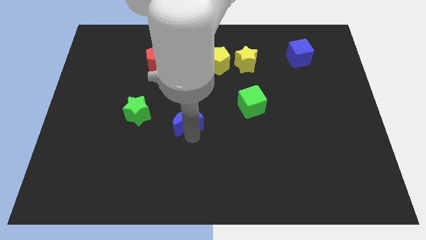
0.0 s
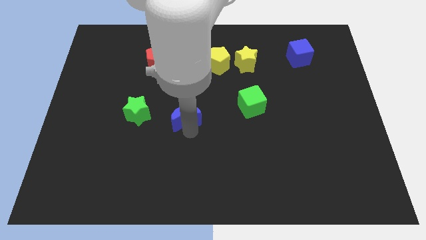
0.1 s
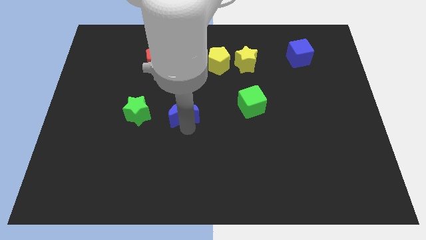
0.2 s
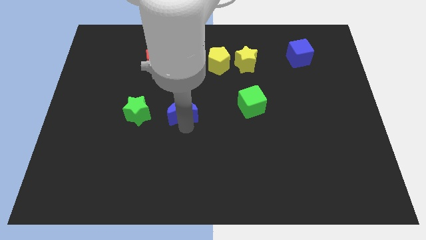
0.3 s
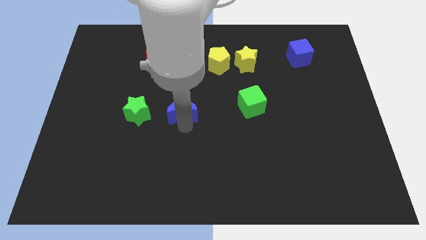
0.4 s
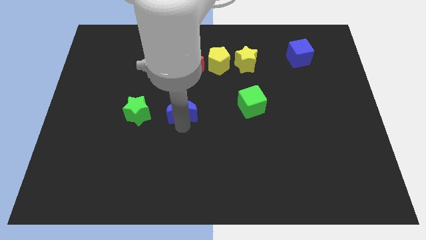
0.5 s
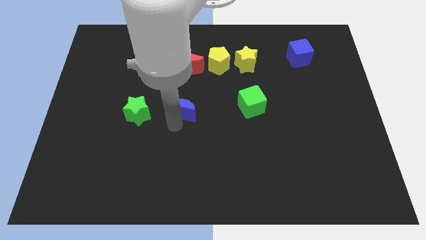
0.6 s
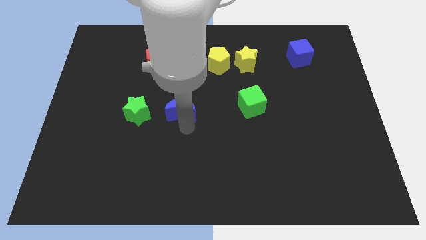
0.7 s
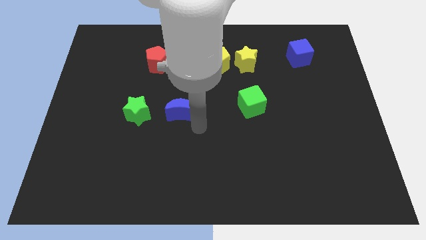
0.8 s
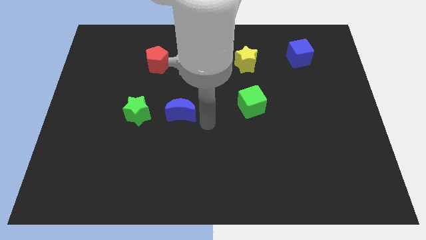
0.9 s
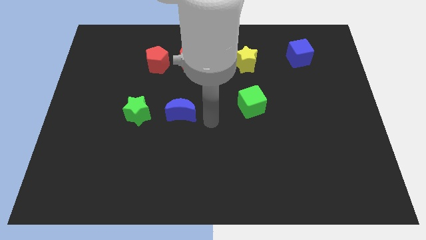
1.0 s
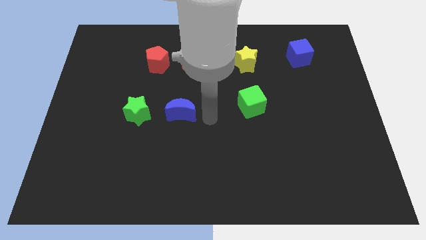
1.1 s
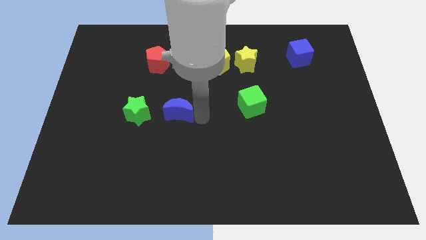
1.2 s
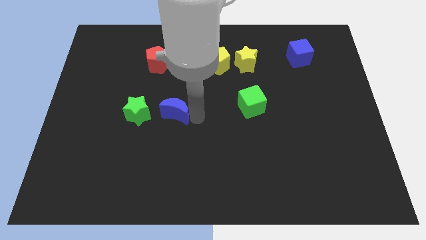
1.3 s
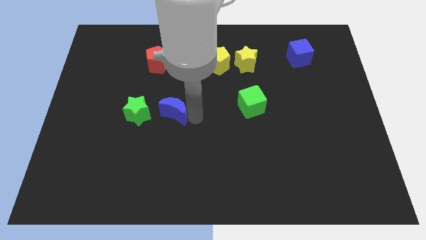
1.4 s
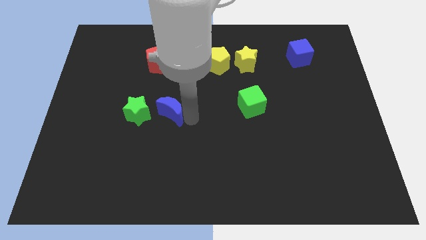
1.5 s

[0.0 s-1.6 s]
put the blue moon to the right of the green star

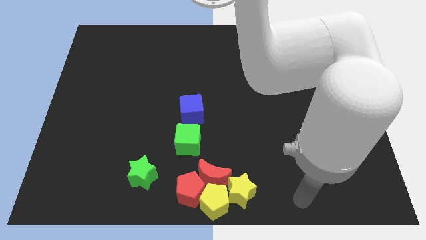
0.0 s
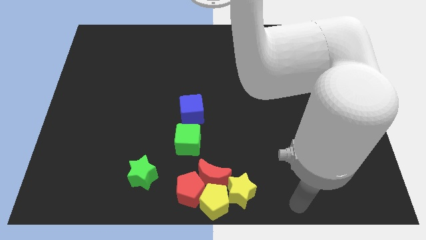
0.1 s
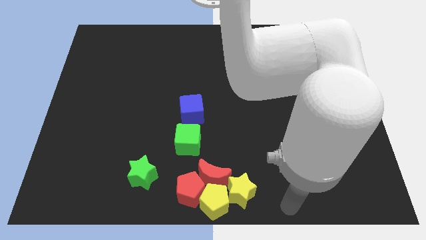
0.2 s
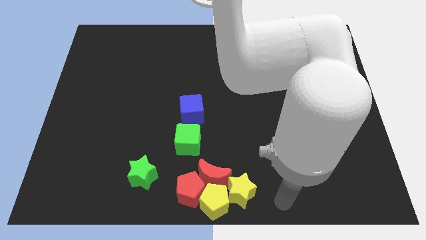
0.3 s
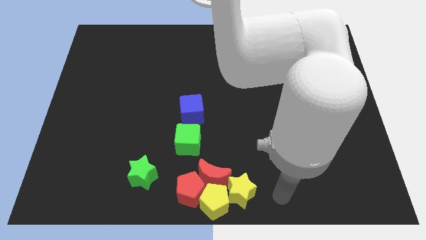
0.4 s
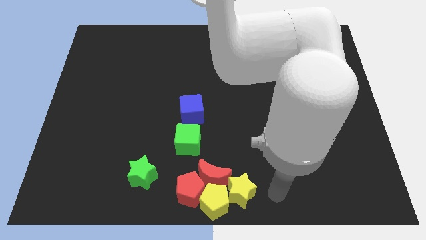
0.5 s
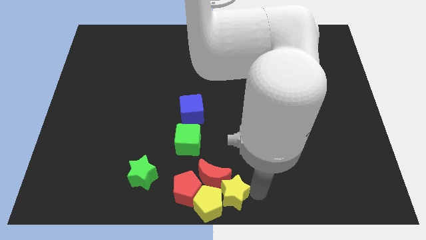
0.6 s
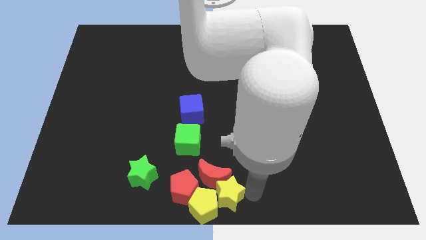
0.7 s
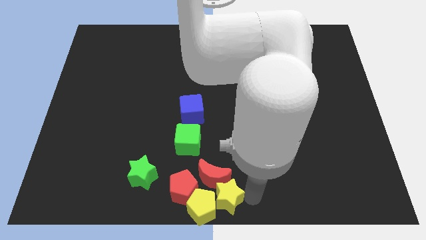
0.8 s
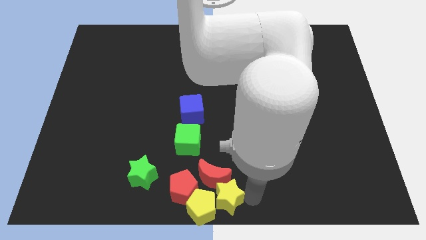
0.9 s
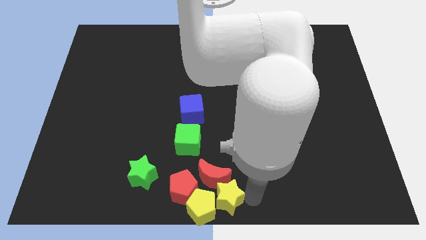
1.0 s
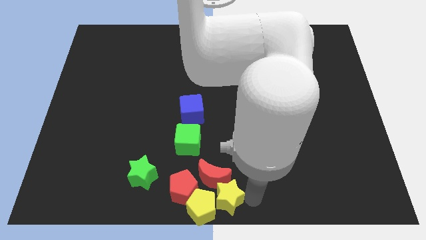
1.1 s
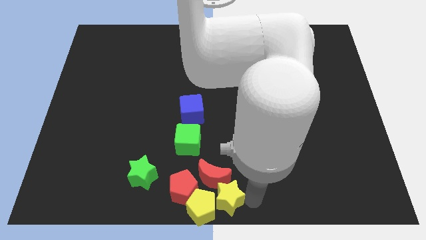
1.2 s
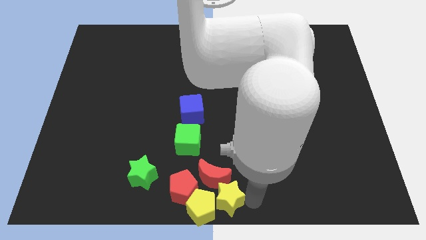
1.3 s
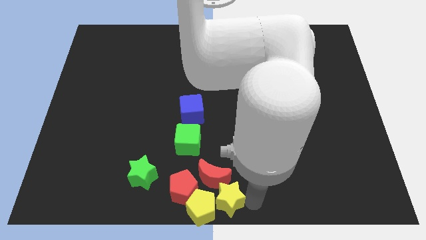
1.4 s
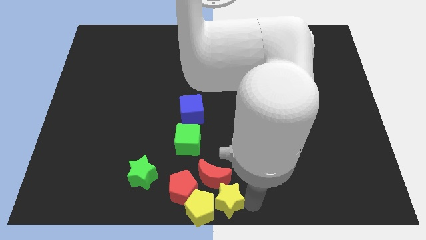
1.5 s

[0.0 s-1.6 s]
adjust the yellow blocks at the bottom center of the board

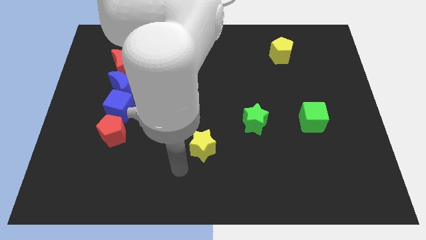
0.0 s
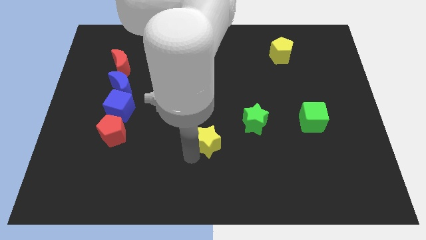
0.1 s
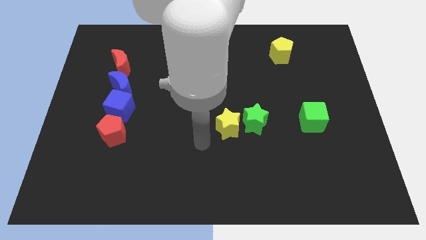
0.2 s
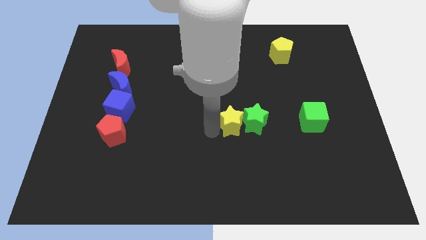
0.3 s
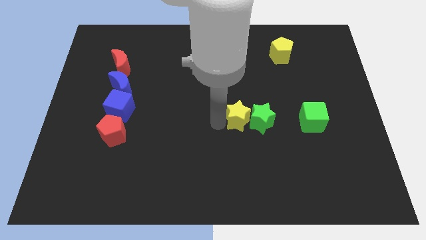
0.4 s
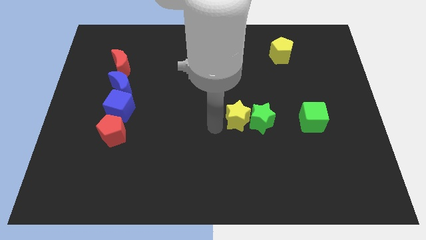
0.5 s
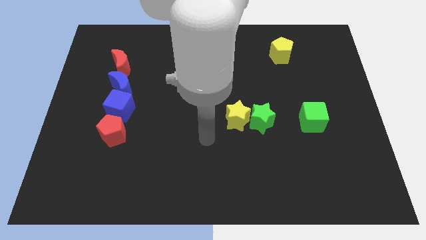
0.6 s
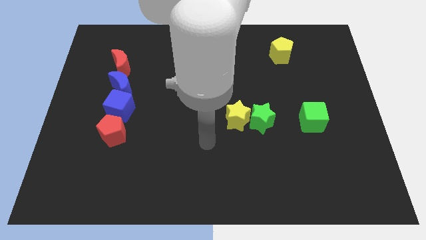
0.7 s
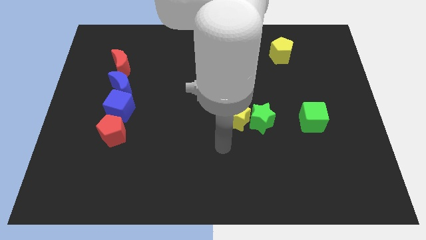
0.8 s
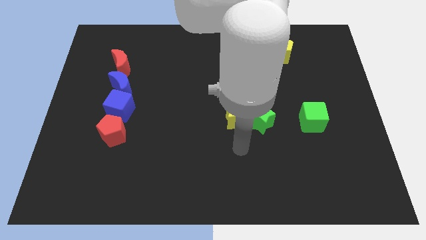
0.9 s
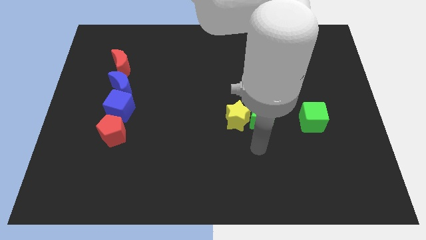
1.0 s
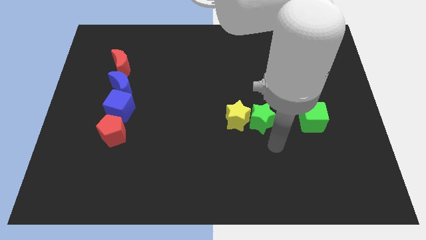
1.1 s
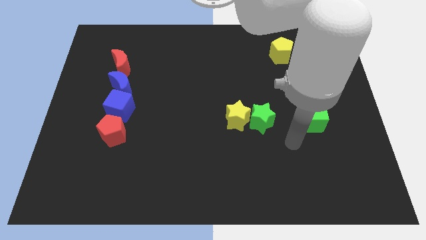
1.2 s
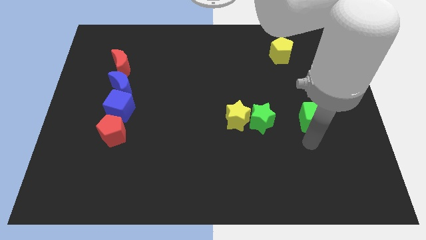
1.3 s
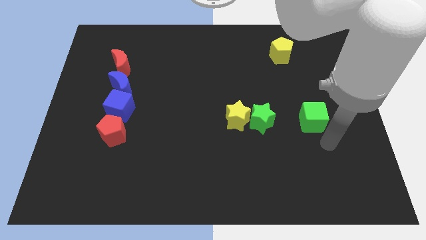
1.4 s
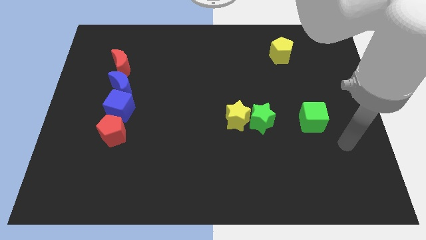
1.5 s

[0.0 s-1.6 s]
move the yellow star to the left of the green star

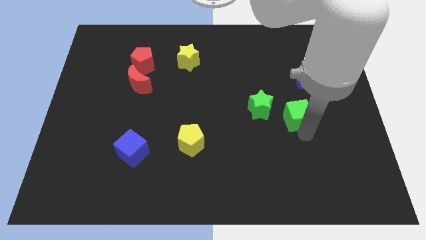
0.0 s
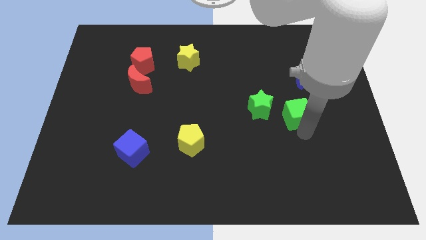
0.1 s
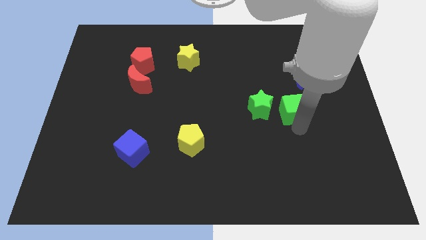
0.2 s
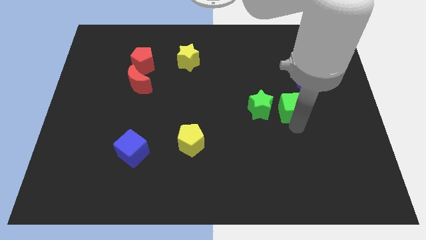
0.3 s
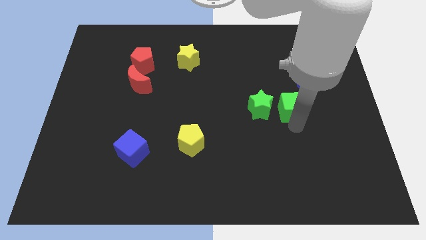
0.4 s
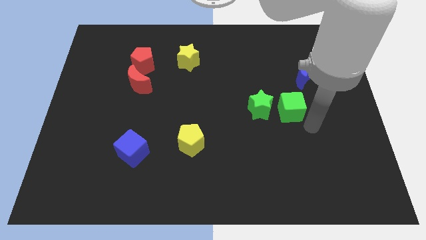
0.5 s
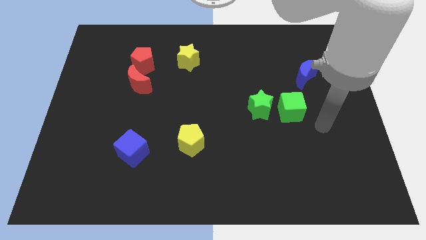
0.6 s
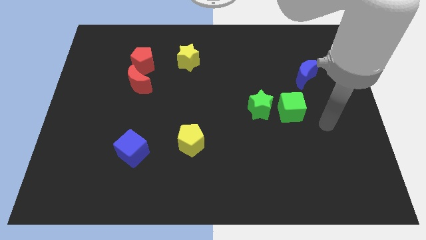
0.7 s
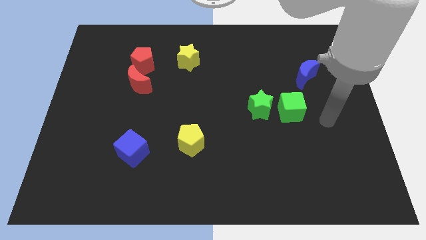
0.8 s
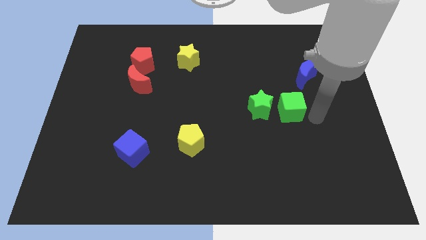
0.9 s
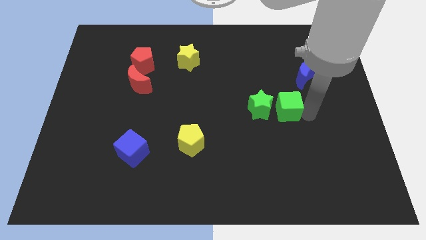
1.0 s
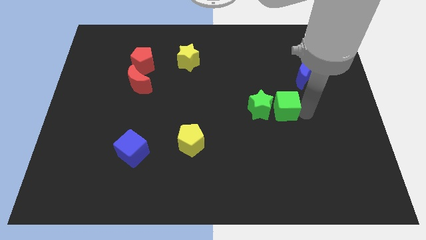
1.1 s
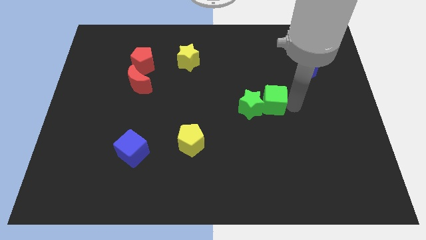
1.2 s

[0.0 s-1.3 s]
push green cube into green star

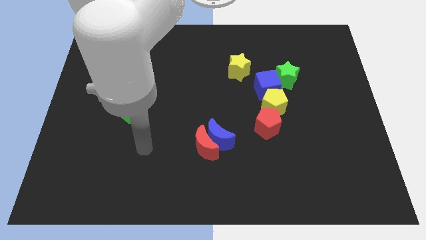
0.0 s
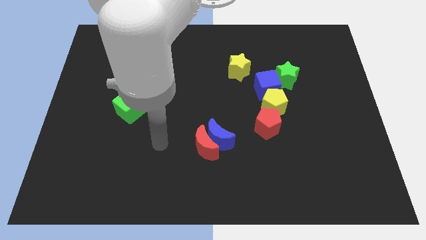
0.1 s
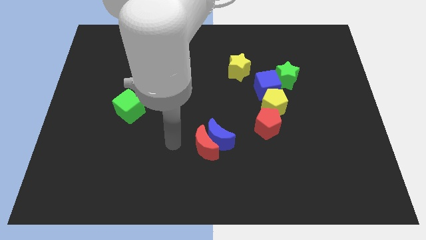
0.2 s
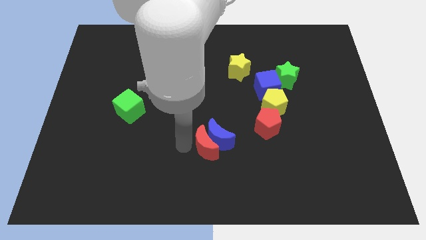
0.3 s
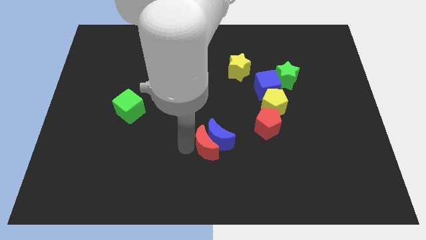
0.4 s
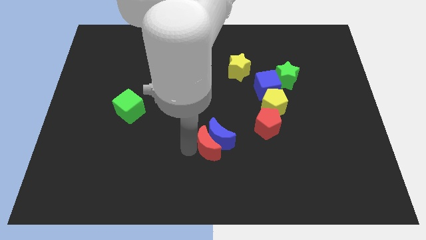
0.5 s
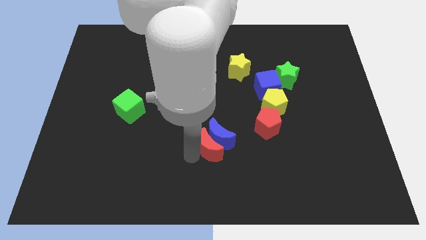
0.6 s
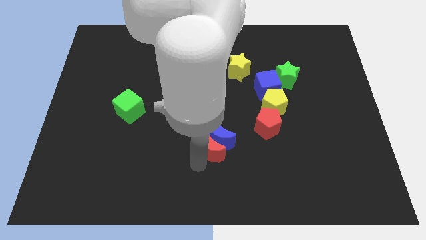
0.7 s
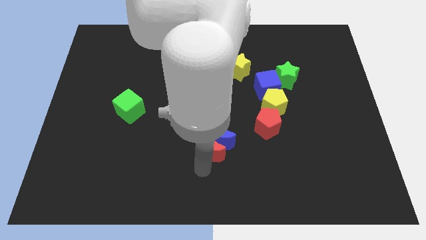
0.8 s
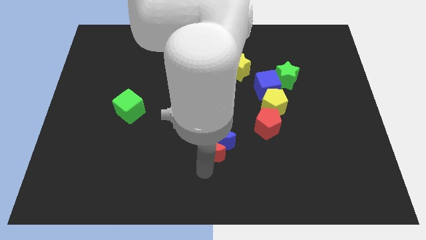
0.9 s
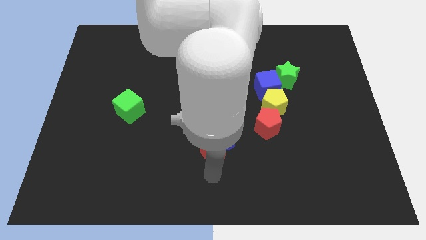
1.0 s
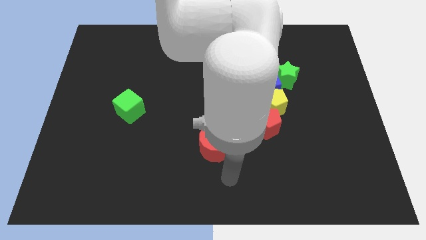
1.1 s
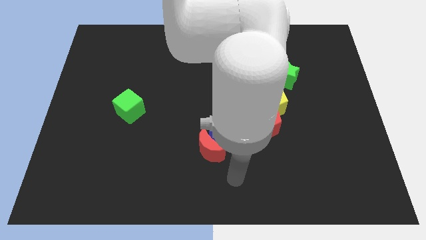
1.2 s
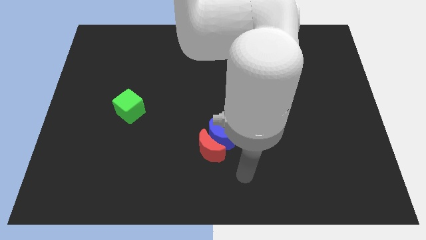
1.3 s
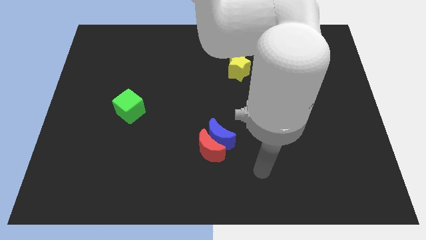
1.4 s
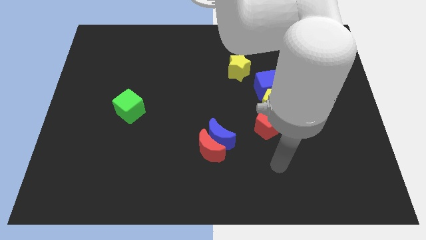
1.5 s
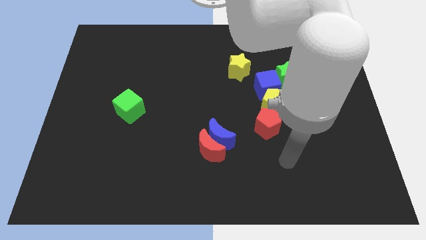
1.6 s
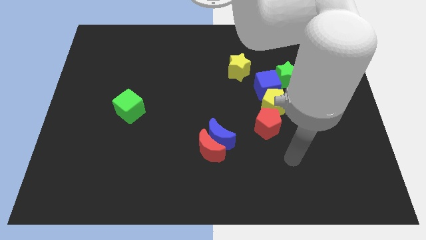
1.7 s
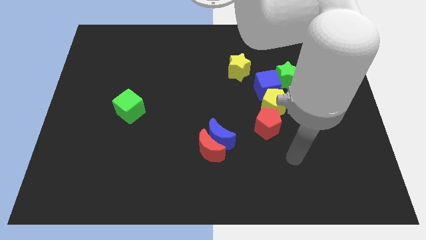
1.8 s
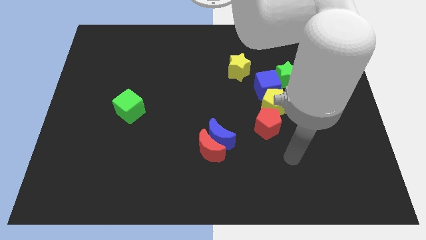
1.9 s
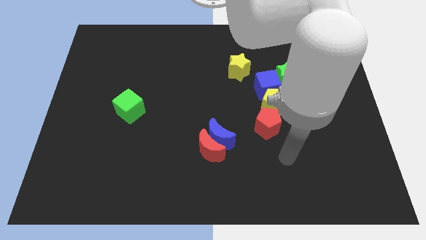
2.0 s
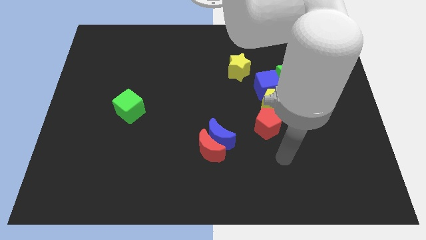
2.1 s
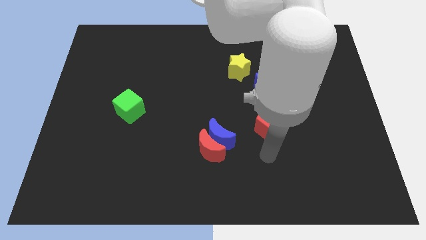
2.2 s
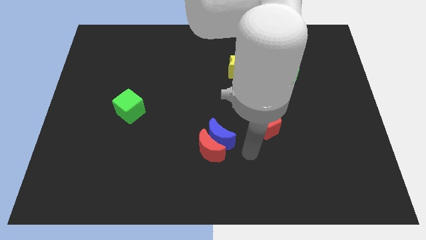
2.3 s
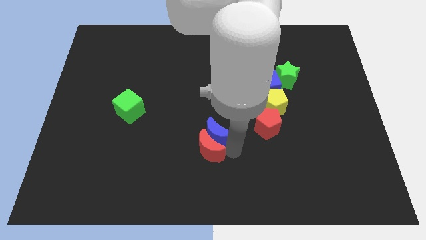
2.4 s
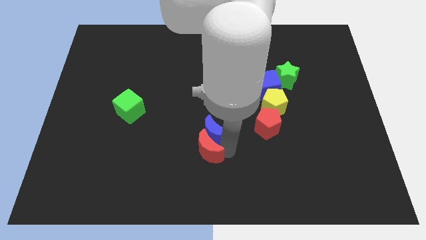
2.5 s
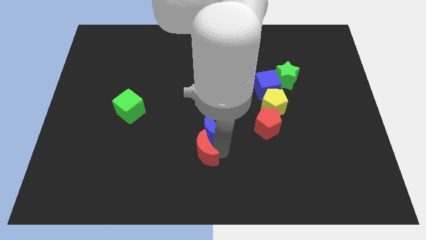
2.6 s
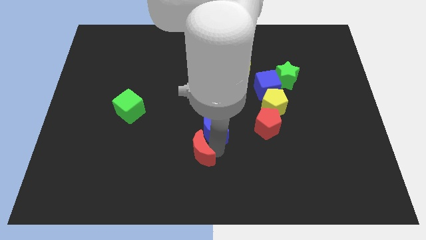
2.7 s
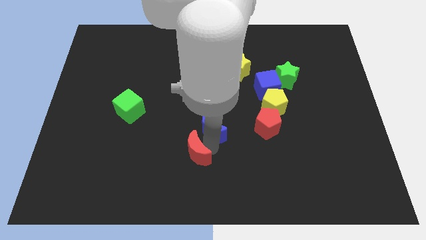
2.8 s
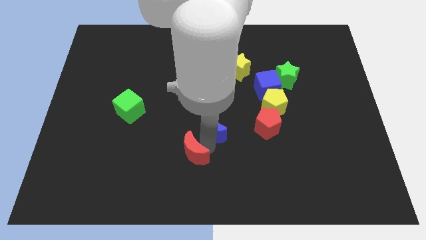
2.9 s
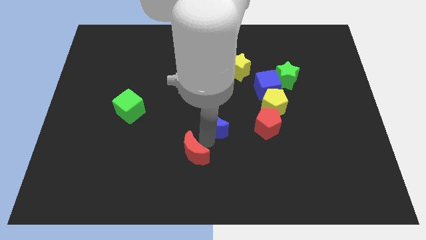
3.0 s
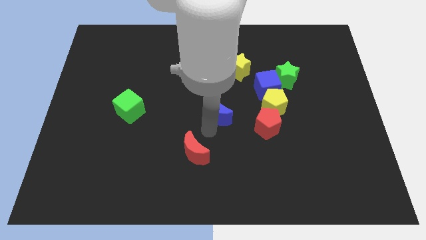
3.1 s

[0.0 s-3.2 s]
separate blue crescent and red crescent
